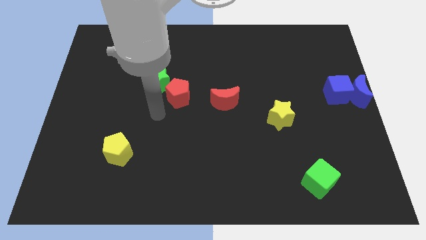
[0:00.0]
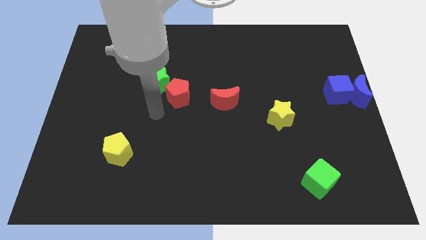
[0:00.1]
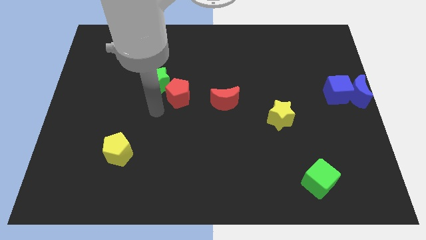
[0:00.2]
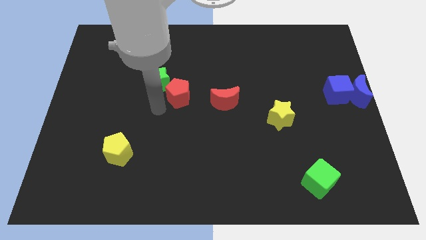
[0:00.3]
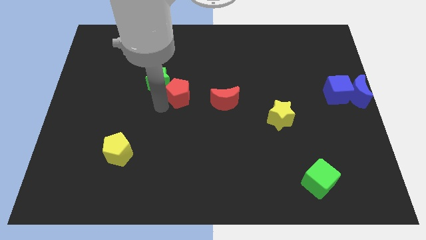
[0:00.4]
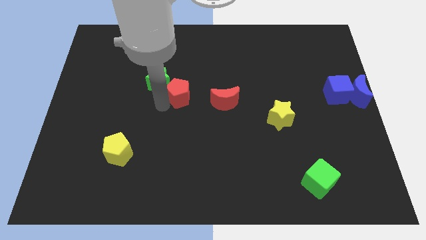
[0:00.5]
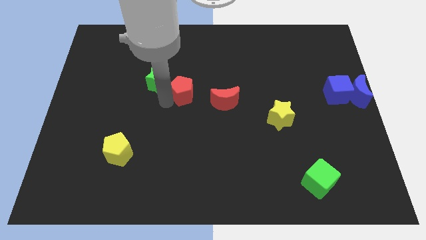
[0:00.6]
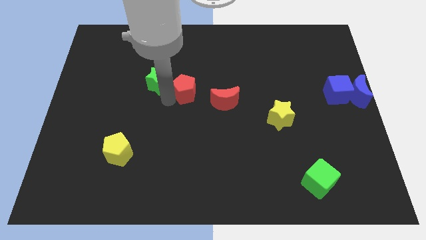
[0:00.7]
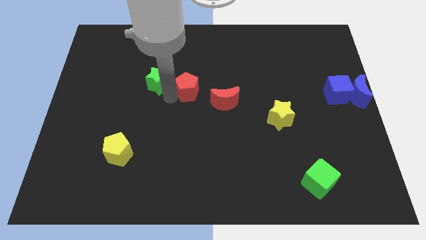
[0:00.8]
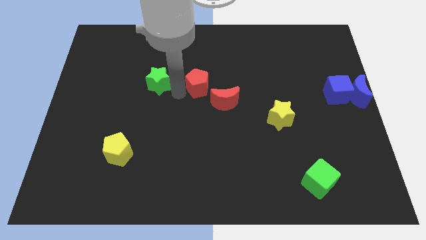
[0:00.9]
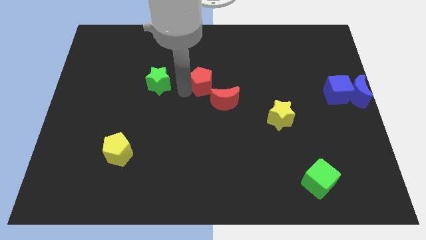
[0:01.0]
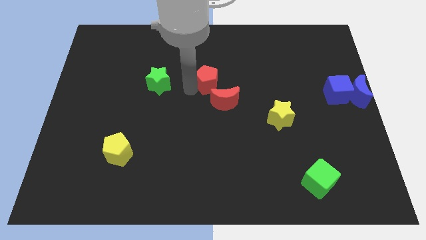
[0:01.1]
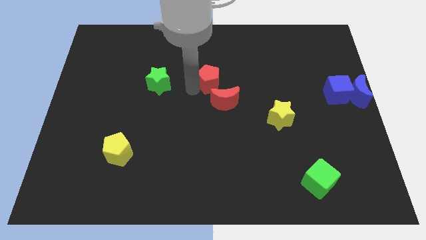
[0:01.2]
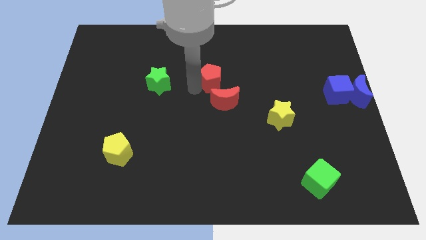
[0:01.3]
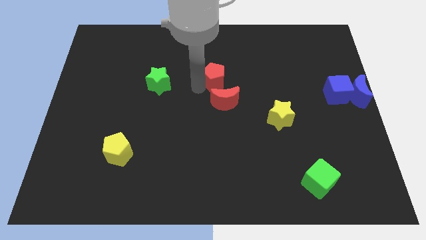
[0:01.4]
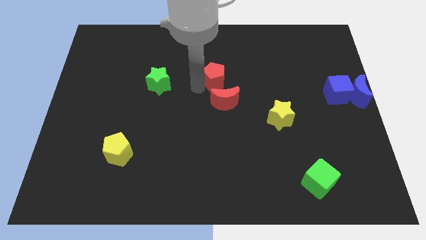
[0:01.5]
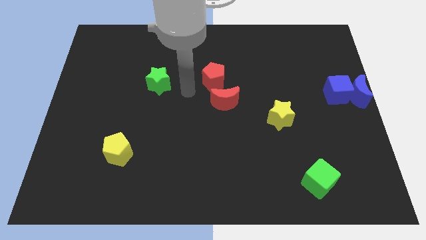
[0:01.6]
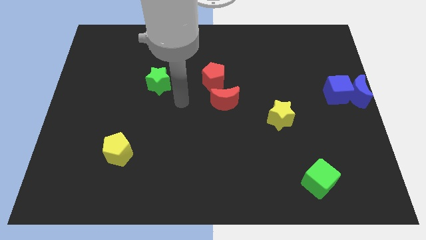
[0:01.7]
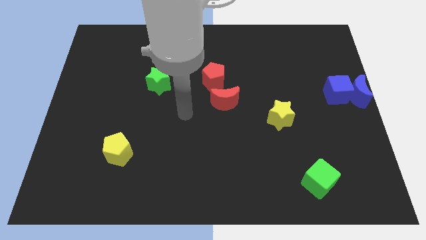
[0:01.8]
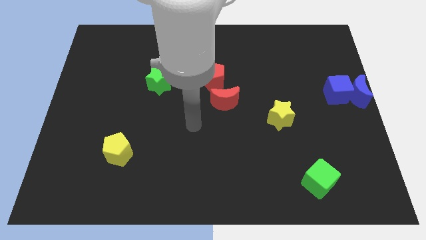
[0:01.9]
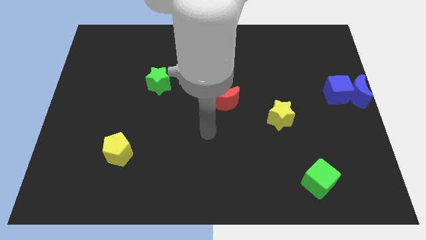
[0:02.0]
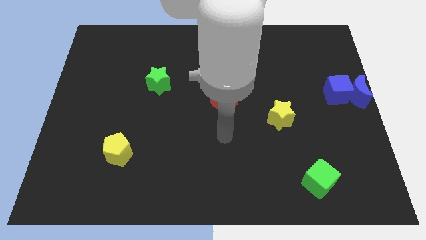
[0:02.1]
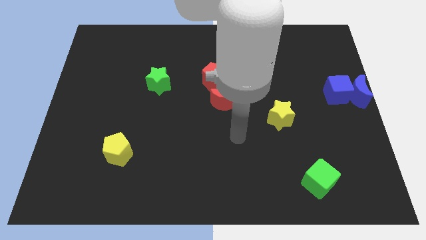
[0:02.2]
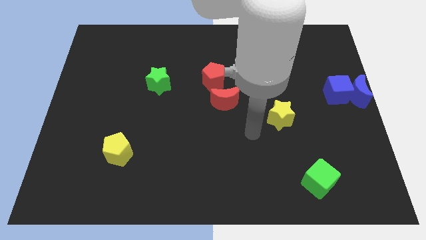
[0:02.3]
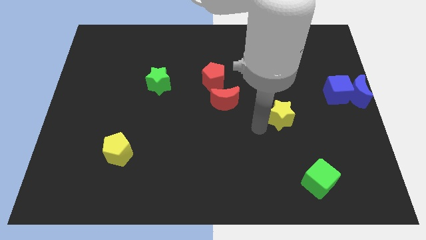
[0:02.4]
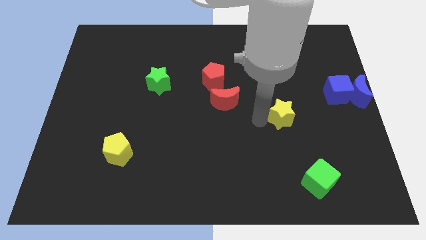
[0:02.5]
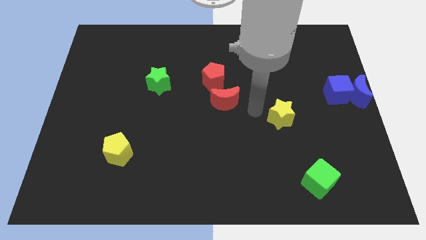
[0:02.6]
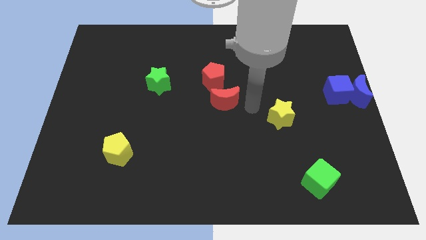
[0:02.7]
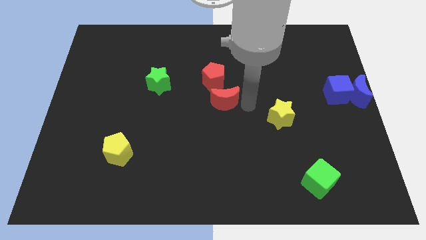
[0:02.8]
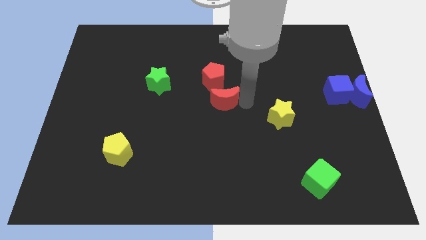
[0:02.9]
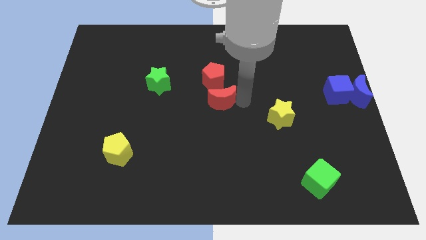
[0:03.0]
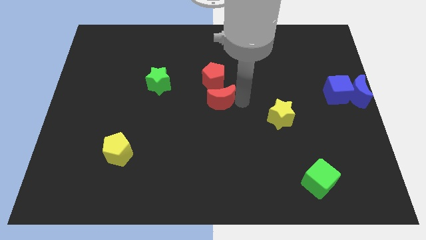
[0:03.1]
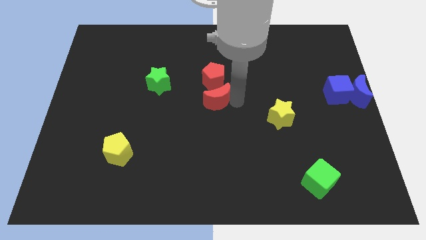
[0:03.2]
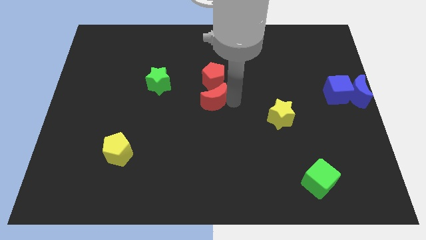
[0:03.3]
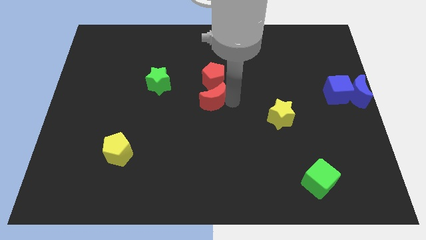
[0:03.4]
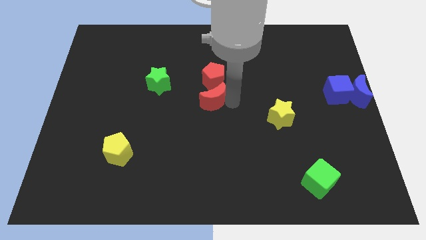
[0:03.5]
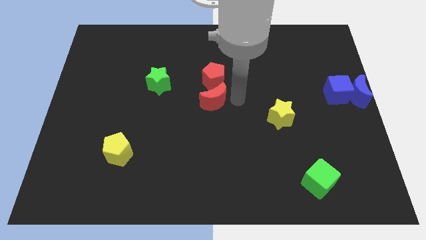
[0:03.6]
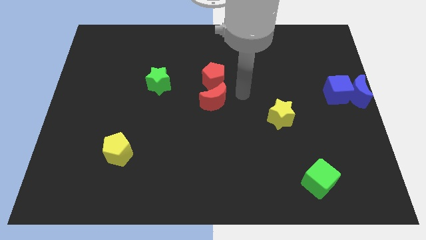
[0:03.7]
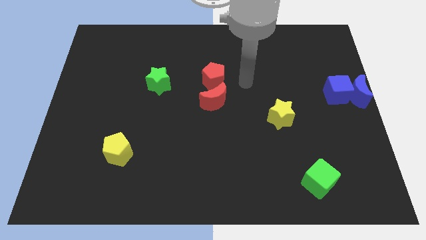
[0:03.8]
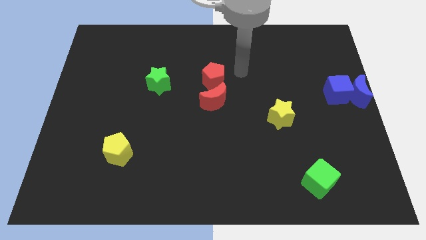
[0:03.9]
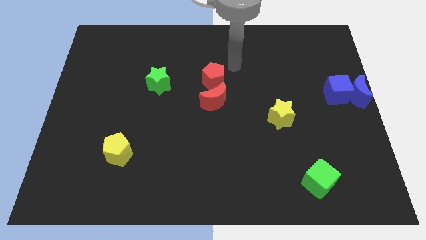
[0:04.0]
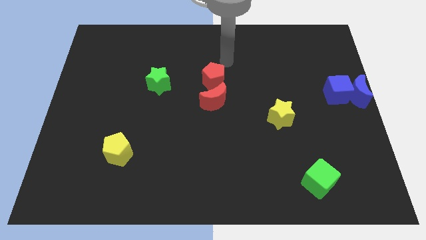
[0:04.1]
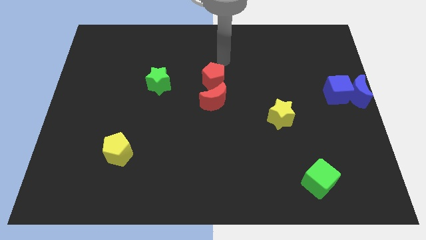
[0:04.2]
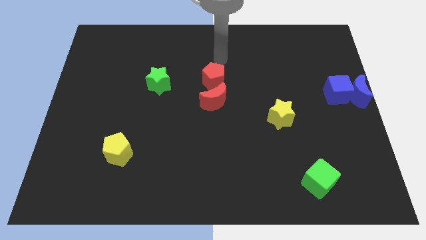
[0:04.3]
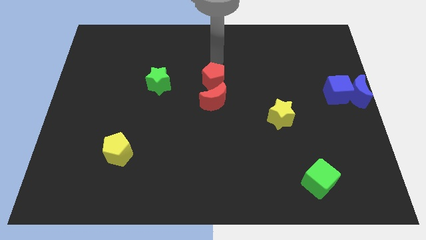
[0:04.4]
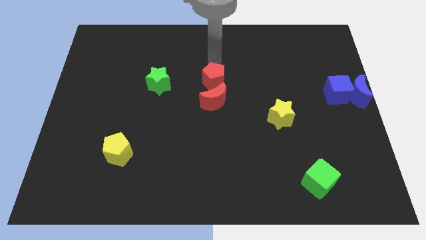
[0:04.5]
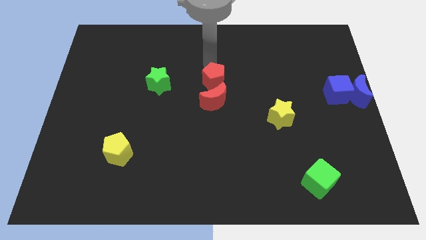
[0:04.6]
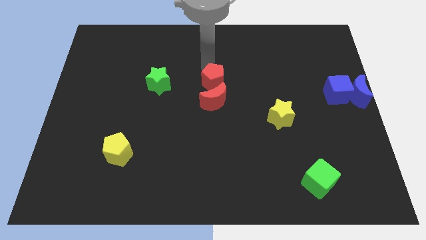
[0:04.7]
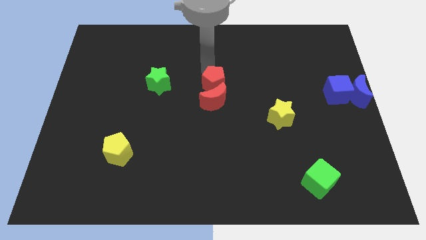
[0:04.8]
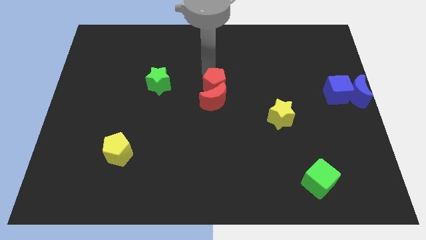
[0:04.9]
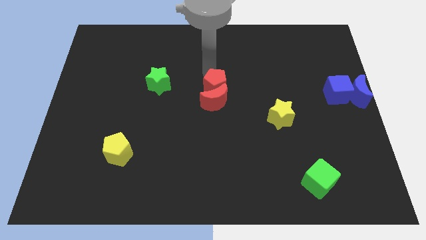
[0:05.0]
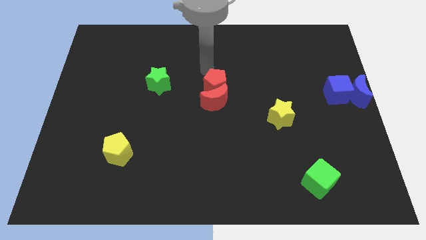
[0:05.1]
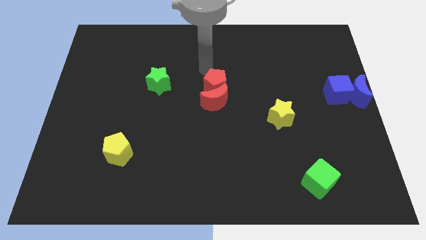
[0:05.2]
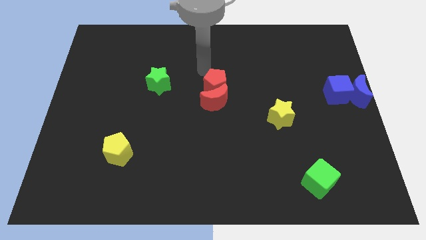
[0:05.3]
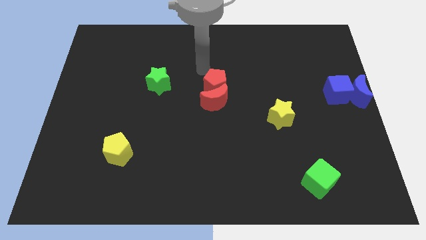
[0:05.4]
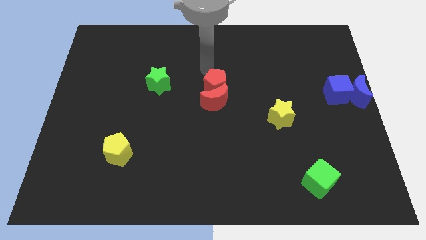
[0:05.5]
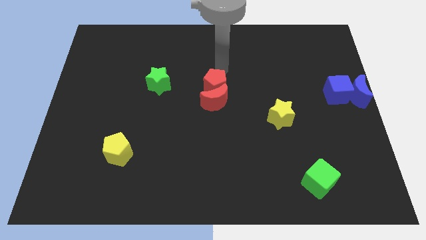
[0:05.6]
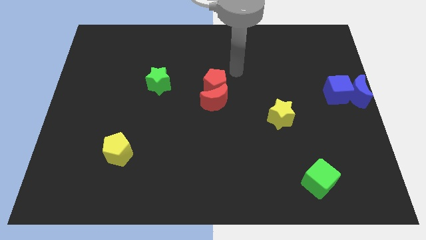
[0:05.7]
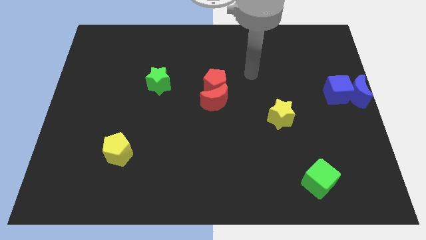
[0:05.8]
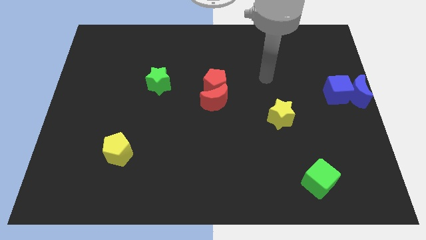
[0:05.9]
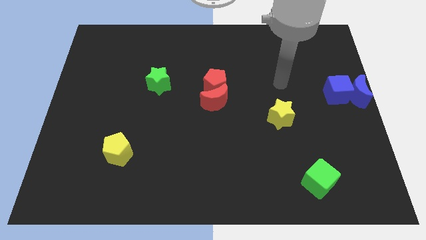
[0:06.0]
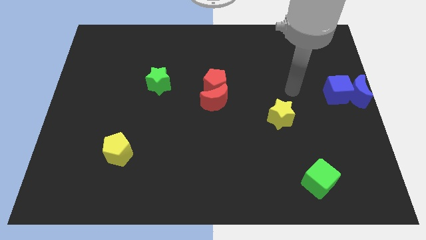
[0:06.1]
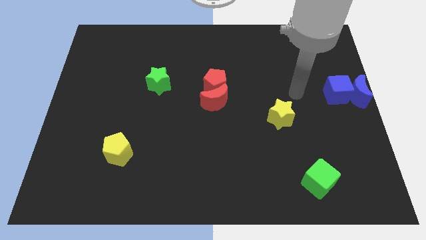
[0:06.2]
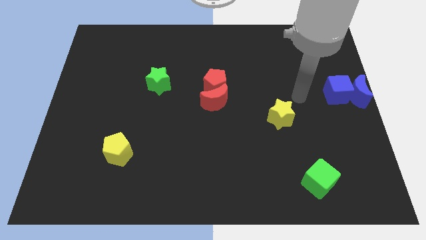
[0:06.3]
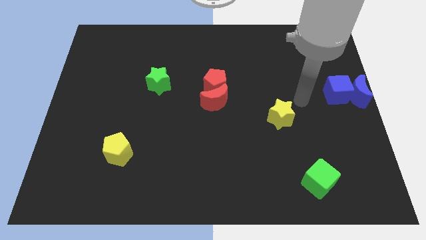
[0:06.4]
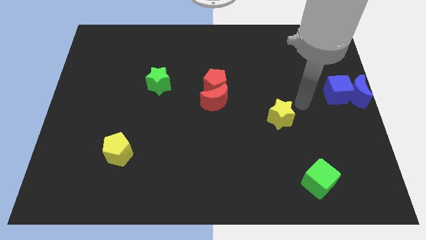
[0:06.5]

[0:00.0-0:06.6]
push the red moon and the red pentagon towards the center of the board

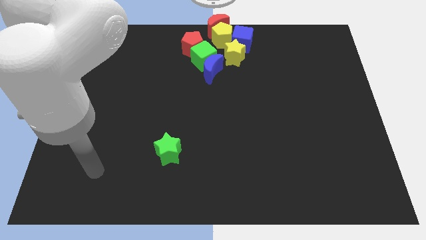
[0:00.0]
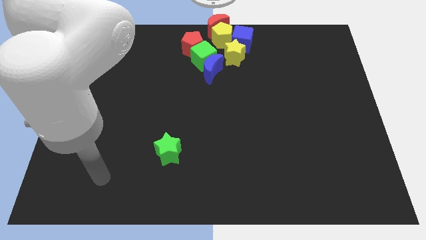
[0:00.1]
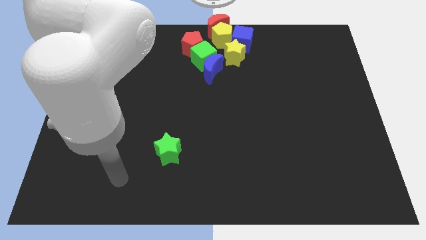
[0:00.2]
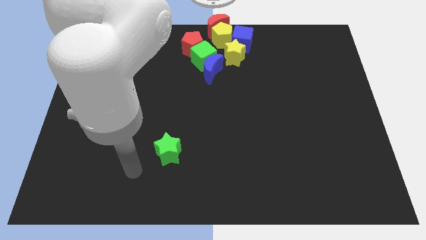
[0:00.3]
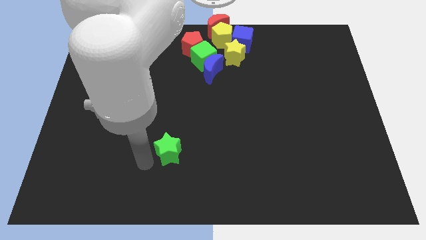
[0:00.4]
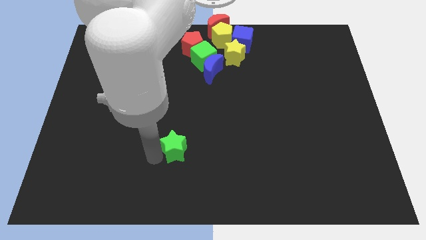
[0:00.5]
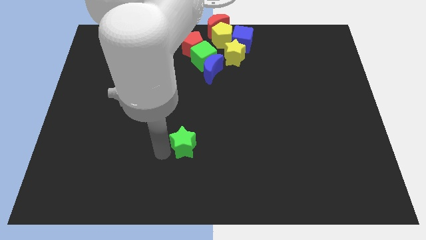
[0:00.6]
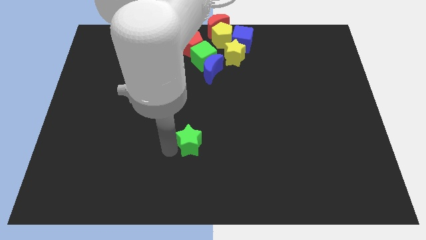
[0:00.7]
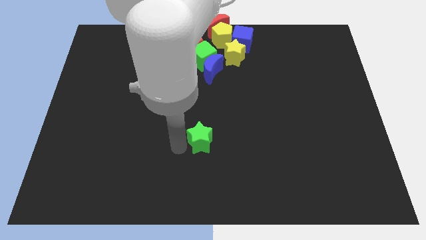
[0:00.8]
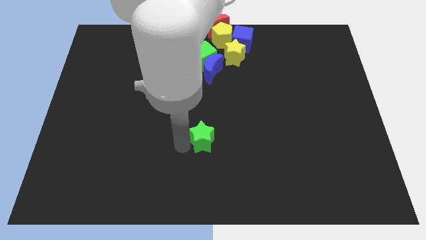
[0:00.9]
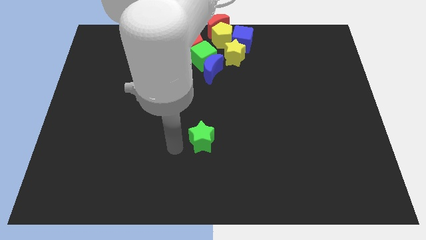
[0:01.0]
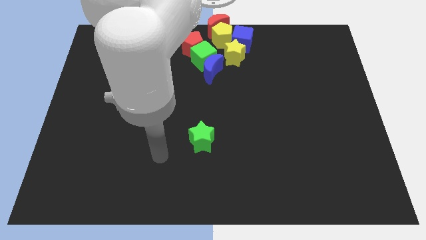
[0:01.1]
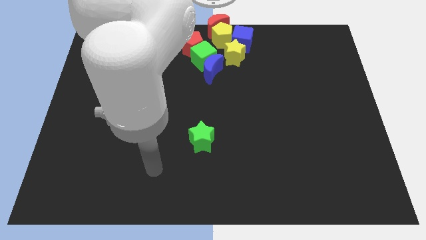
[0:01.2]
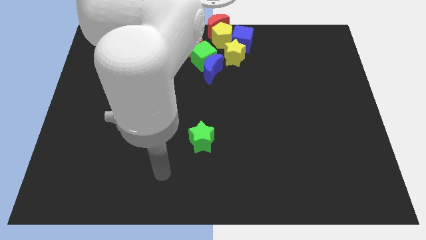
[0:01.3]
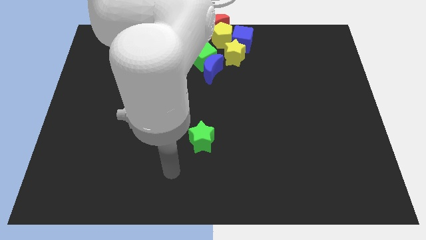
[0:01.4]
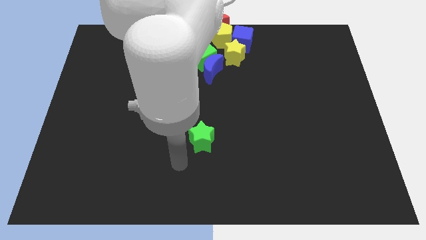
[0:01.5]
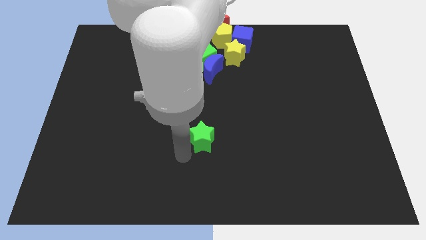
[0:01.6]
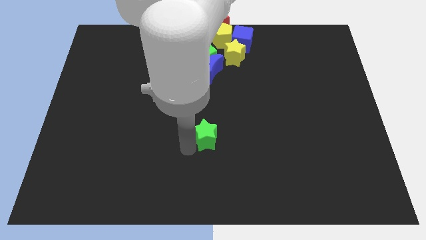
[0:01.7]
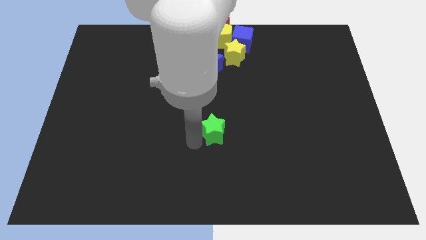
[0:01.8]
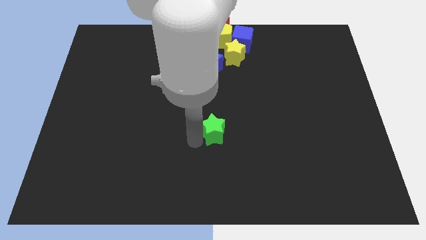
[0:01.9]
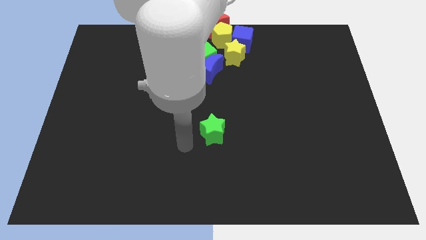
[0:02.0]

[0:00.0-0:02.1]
move green star slightly up

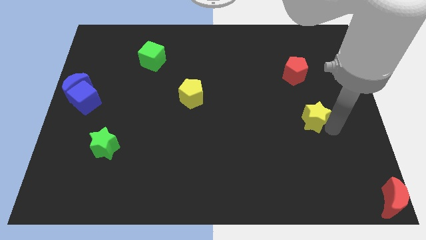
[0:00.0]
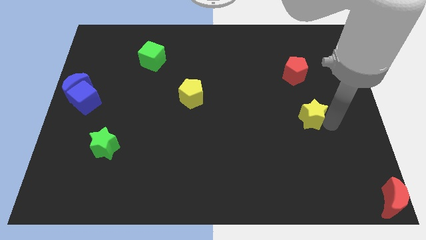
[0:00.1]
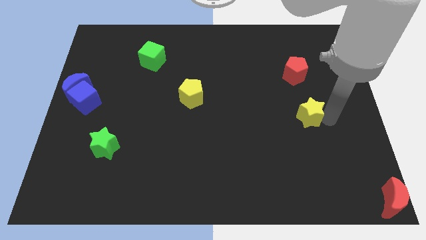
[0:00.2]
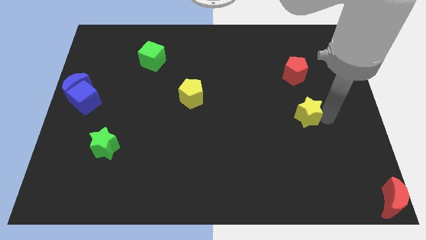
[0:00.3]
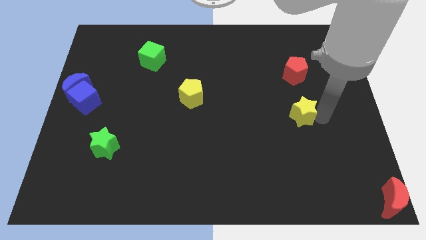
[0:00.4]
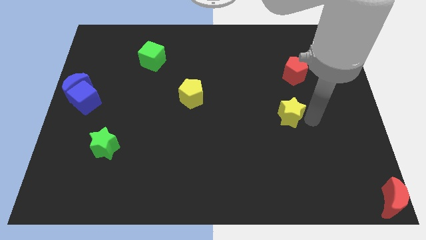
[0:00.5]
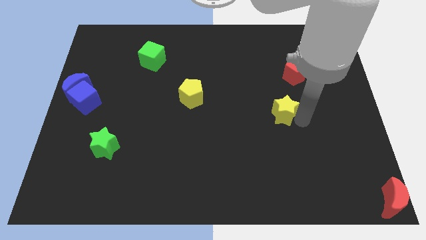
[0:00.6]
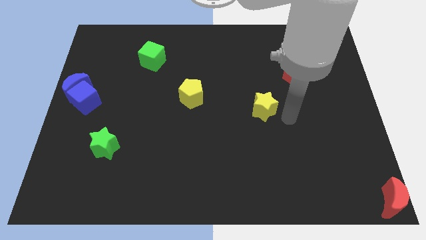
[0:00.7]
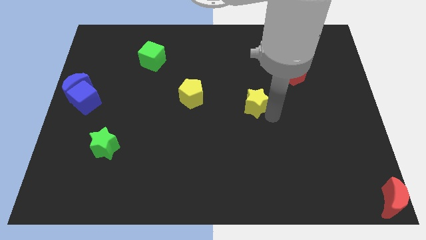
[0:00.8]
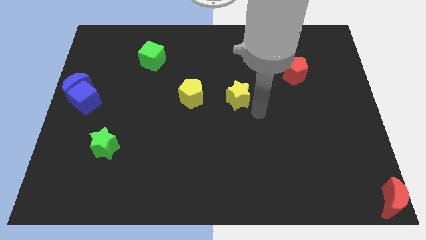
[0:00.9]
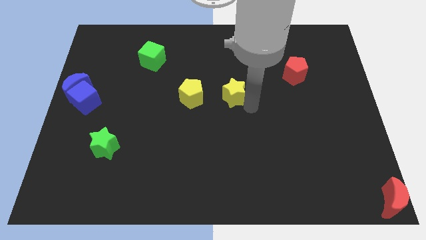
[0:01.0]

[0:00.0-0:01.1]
place the yellow star to the right of the yellow pentagon
